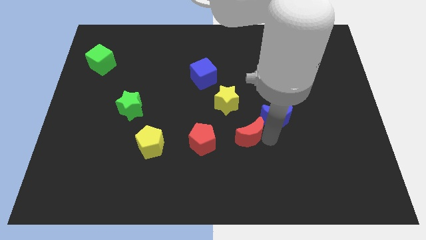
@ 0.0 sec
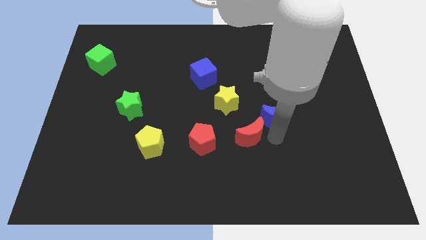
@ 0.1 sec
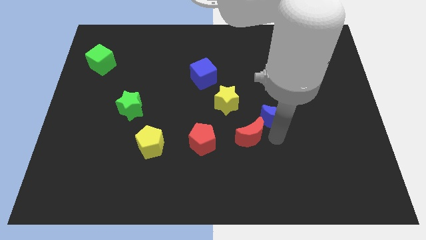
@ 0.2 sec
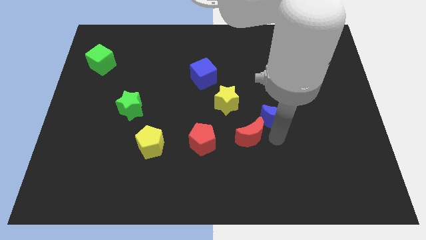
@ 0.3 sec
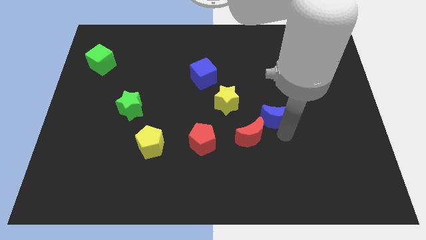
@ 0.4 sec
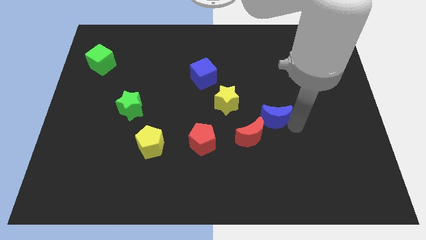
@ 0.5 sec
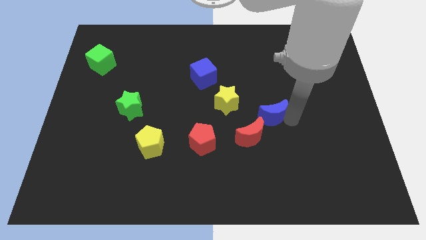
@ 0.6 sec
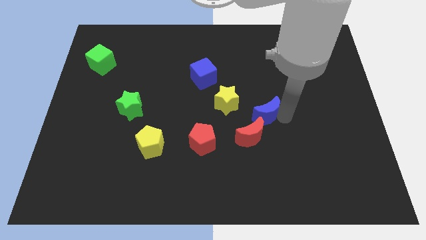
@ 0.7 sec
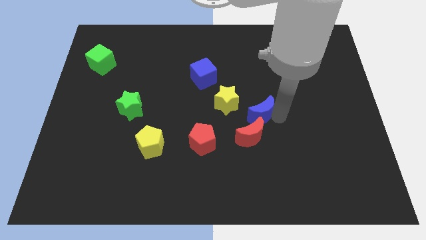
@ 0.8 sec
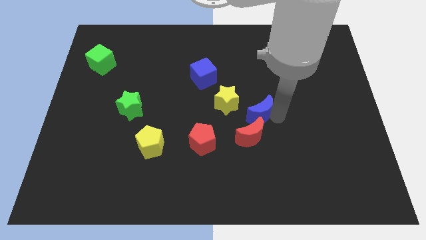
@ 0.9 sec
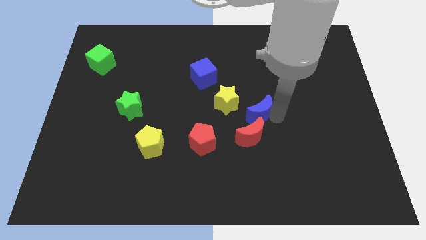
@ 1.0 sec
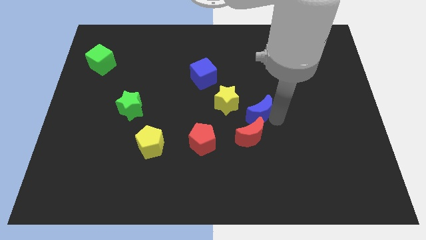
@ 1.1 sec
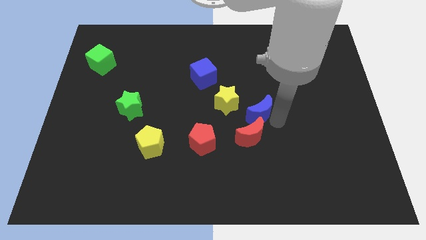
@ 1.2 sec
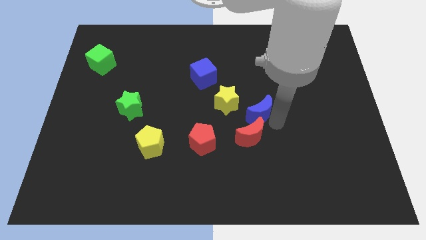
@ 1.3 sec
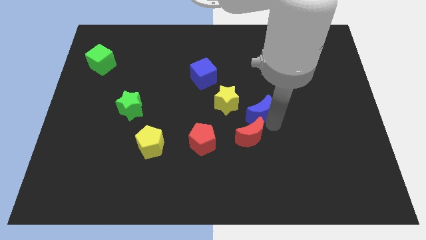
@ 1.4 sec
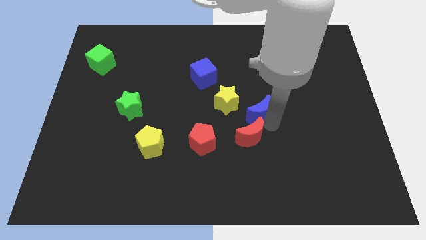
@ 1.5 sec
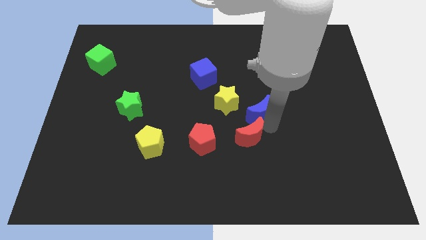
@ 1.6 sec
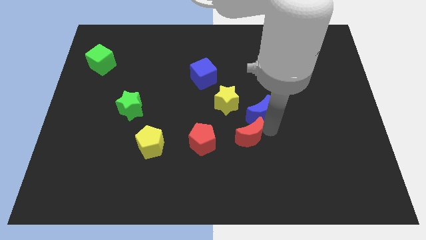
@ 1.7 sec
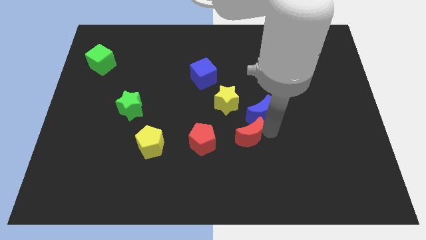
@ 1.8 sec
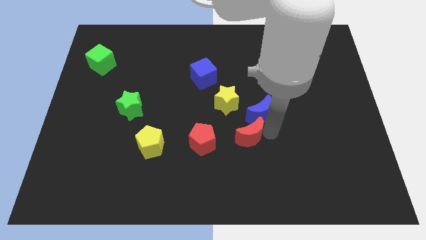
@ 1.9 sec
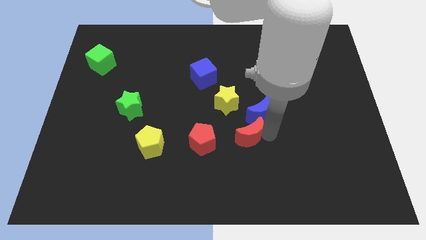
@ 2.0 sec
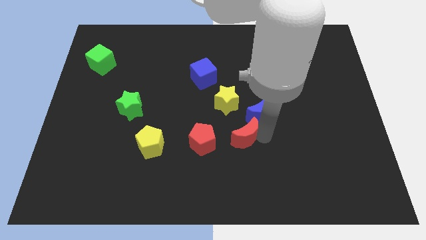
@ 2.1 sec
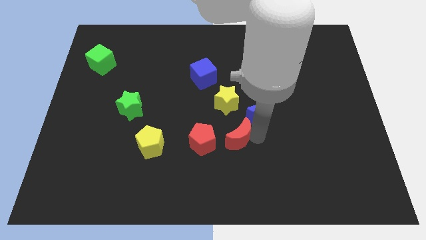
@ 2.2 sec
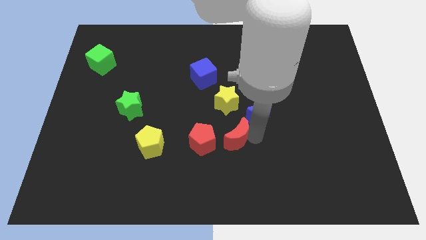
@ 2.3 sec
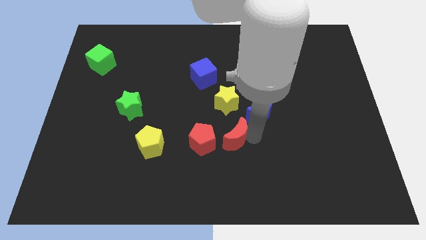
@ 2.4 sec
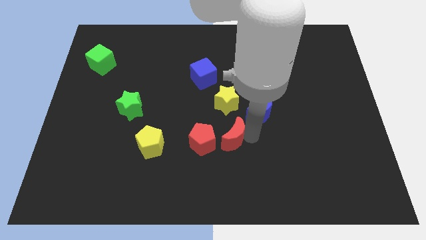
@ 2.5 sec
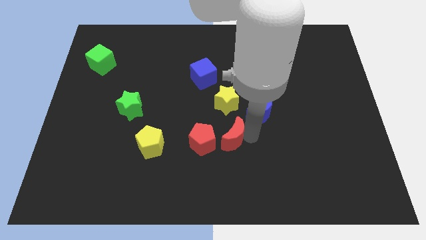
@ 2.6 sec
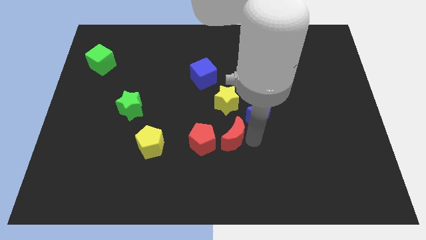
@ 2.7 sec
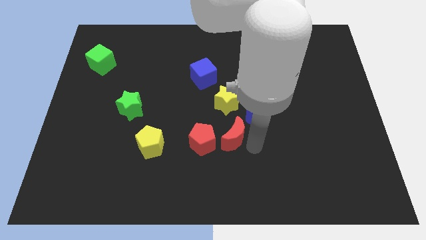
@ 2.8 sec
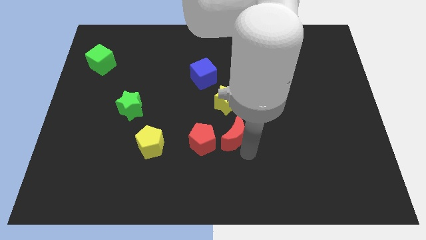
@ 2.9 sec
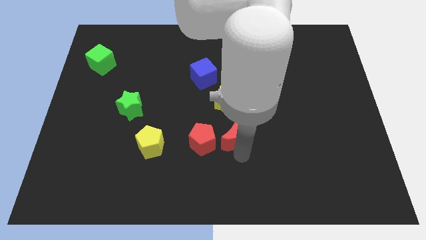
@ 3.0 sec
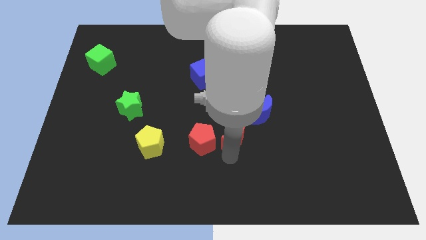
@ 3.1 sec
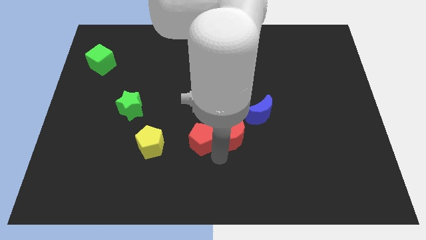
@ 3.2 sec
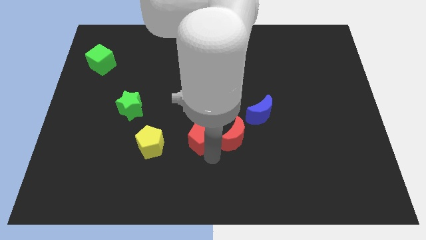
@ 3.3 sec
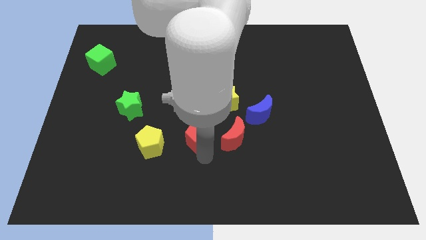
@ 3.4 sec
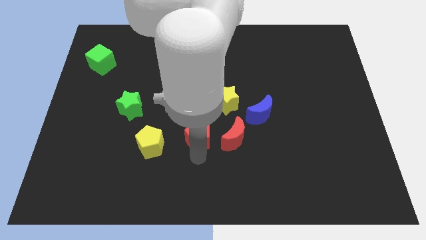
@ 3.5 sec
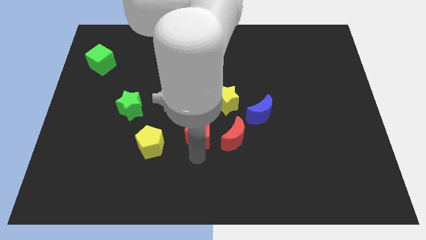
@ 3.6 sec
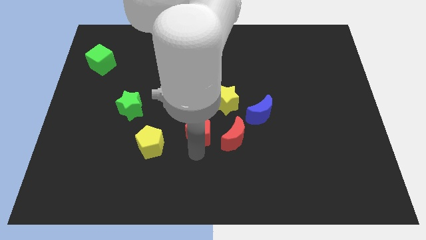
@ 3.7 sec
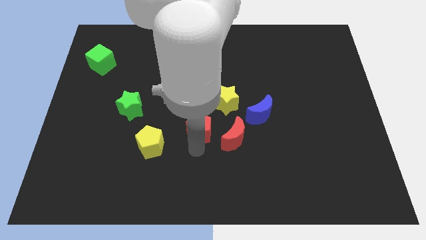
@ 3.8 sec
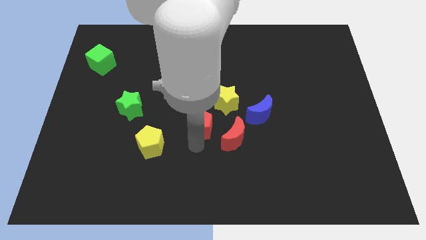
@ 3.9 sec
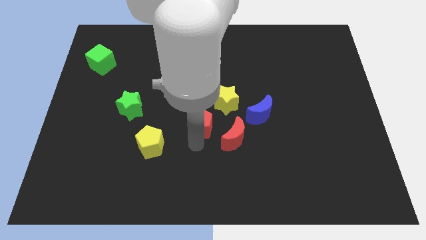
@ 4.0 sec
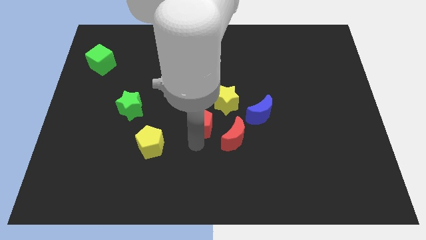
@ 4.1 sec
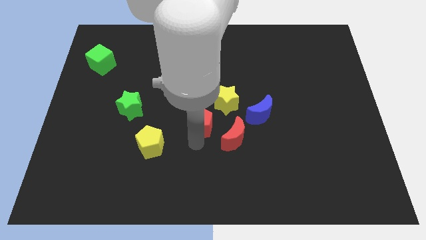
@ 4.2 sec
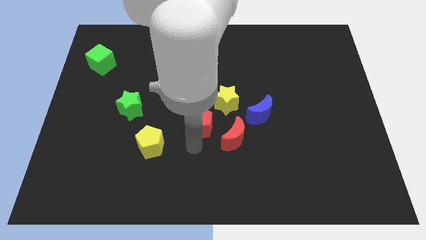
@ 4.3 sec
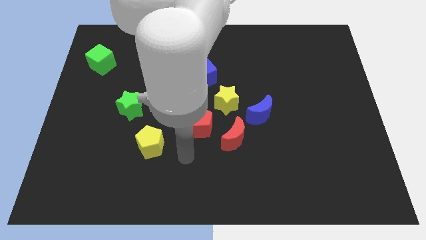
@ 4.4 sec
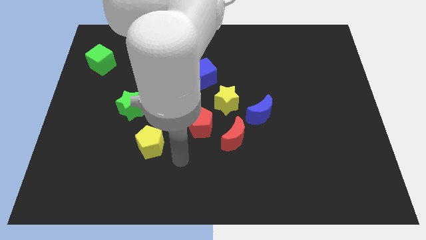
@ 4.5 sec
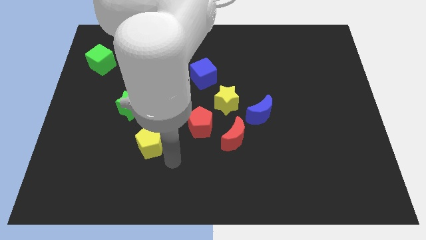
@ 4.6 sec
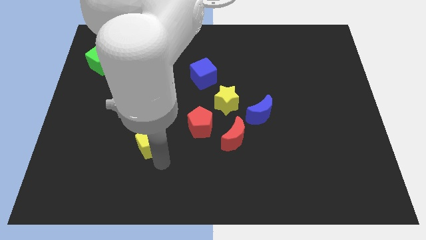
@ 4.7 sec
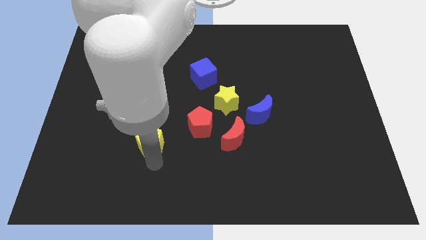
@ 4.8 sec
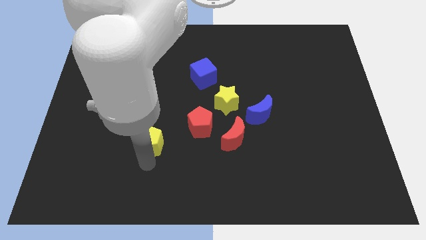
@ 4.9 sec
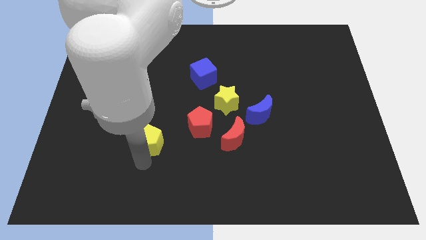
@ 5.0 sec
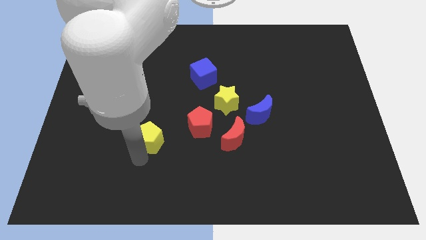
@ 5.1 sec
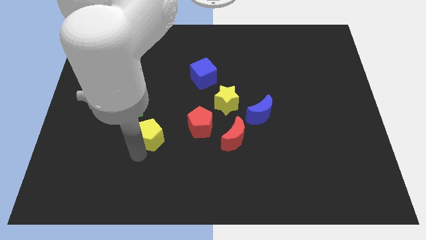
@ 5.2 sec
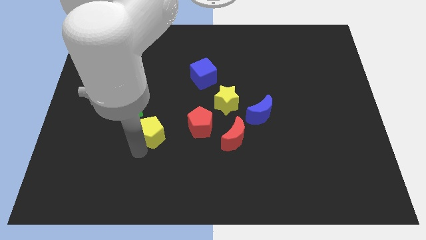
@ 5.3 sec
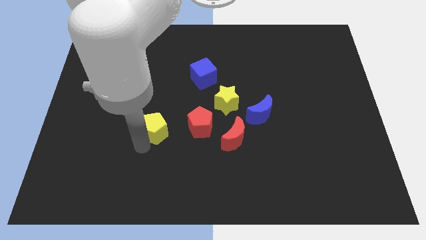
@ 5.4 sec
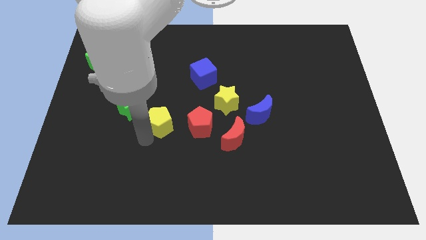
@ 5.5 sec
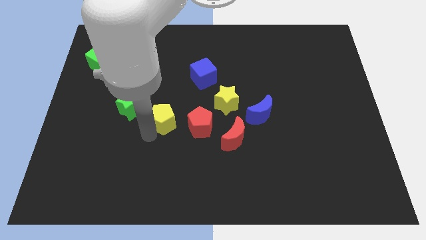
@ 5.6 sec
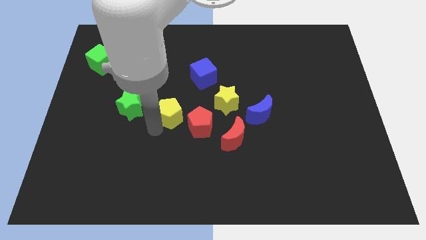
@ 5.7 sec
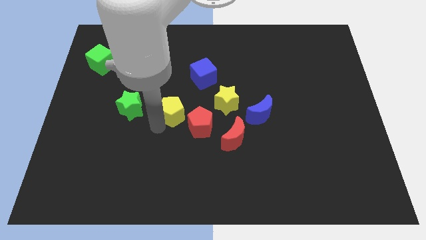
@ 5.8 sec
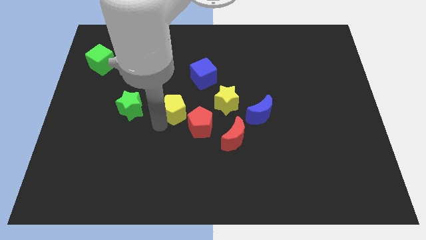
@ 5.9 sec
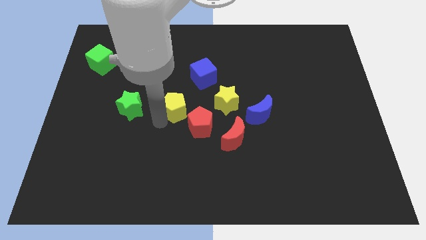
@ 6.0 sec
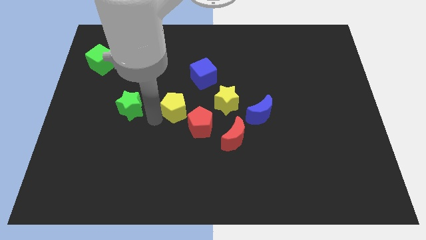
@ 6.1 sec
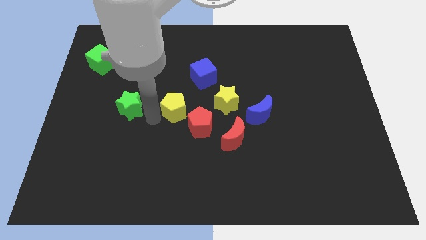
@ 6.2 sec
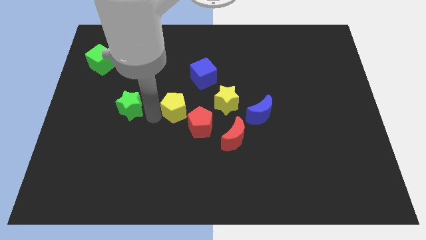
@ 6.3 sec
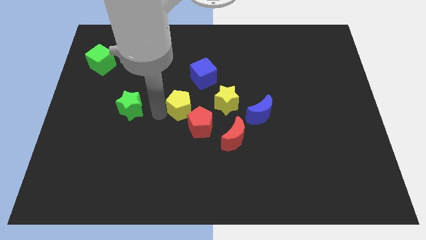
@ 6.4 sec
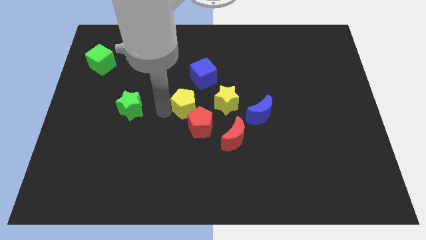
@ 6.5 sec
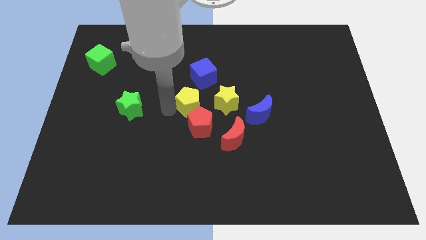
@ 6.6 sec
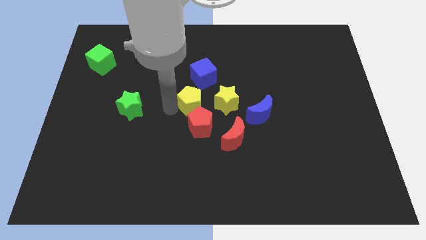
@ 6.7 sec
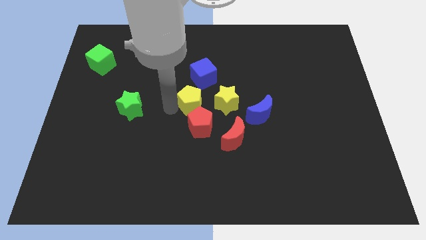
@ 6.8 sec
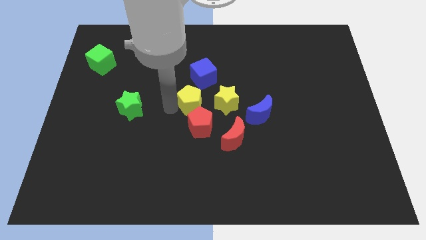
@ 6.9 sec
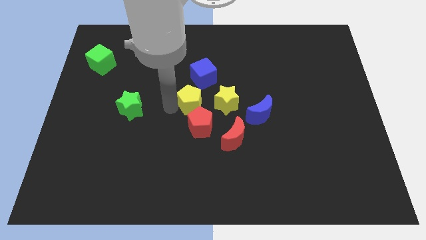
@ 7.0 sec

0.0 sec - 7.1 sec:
adjust the red and blue moons and yellow and red pentagons towards the center

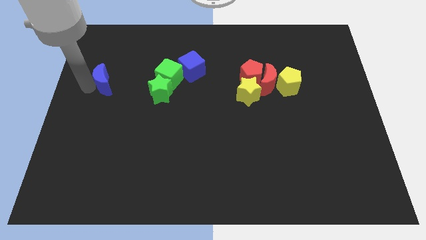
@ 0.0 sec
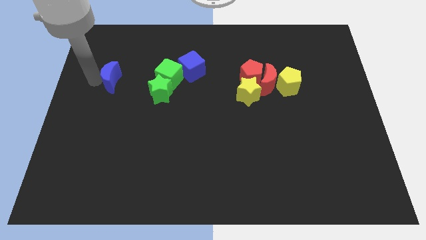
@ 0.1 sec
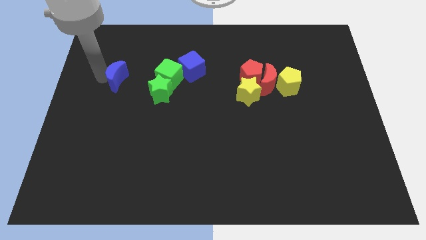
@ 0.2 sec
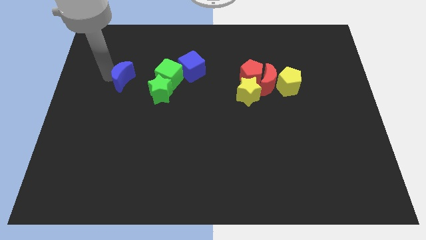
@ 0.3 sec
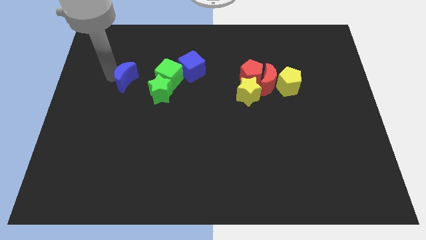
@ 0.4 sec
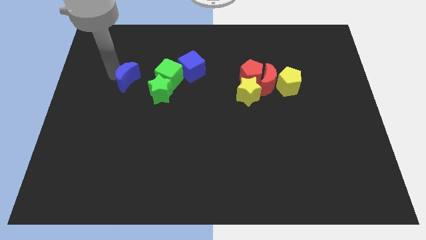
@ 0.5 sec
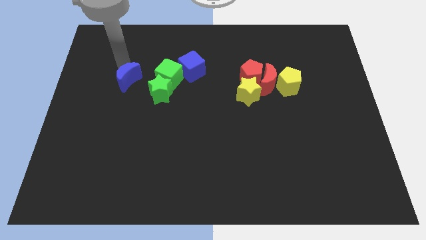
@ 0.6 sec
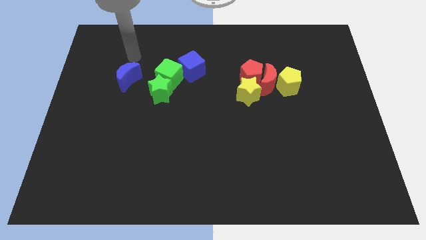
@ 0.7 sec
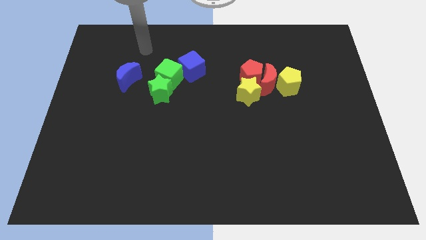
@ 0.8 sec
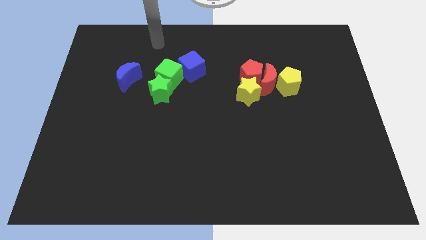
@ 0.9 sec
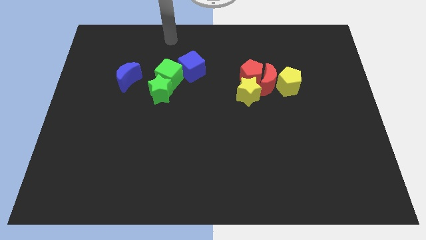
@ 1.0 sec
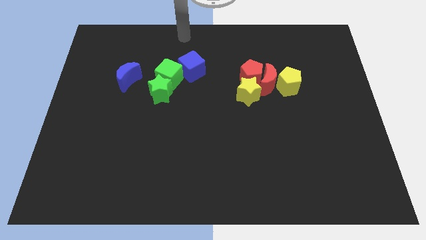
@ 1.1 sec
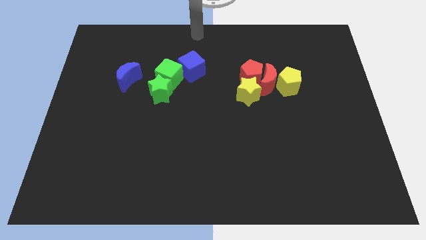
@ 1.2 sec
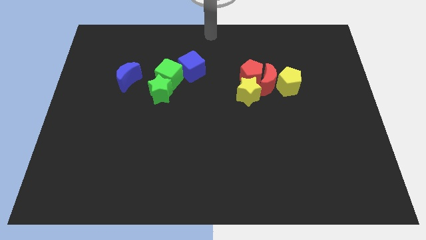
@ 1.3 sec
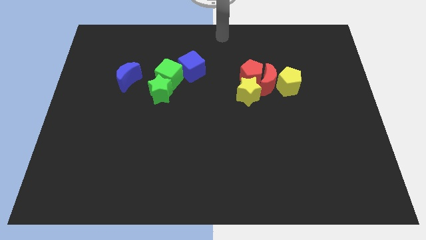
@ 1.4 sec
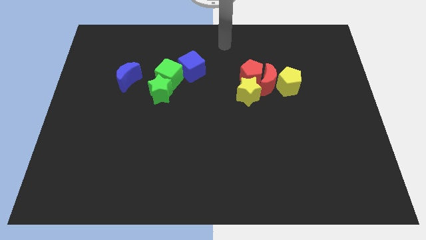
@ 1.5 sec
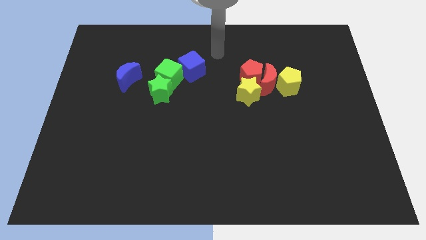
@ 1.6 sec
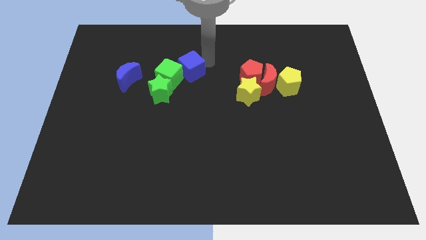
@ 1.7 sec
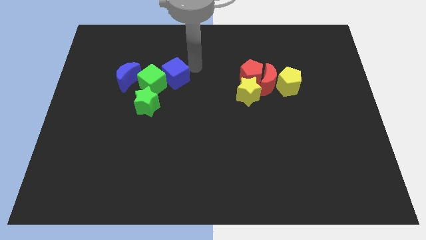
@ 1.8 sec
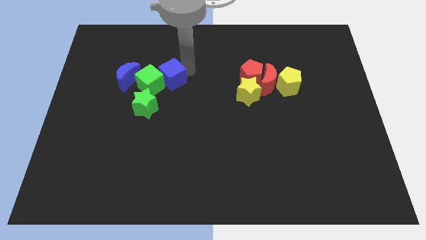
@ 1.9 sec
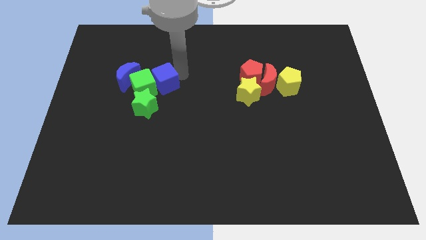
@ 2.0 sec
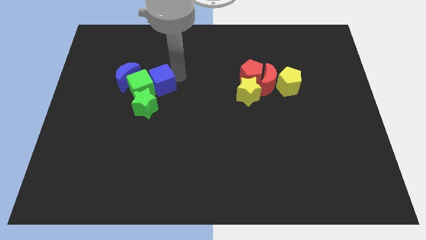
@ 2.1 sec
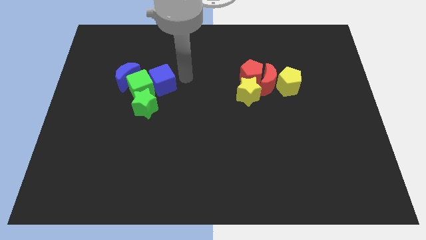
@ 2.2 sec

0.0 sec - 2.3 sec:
push the blue moon and group of green and blue blocks together at the left
